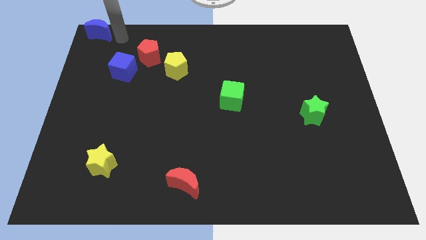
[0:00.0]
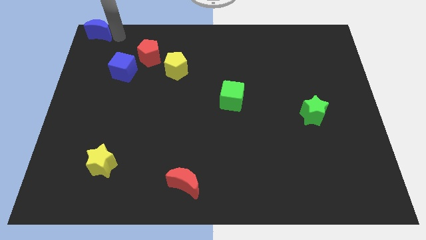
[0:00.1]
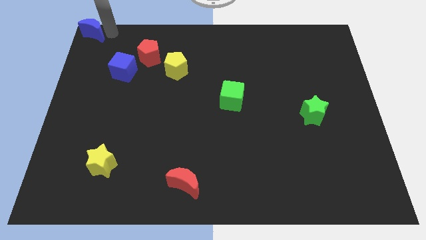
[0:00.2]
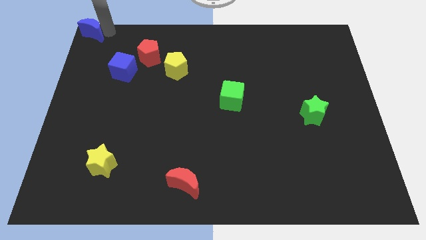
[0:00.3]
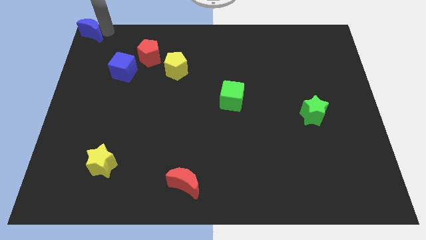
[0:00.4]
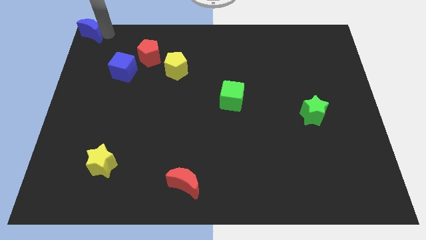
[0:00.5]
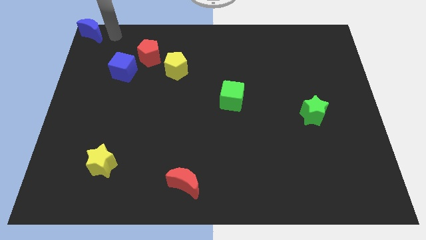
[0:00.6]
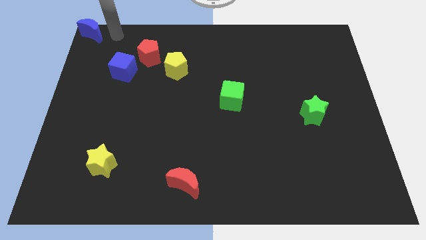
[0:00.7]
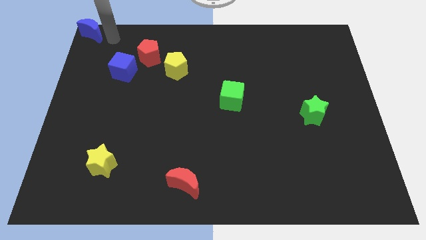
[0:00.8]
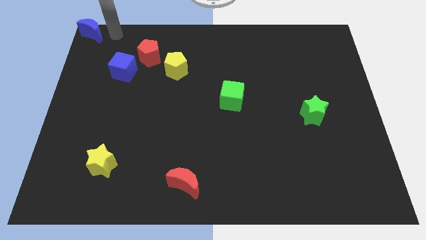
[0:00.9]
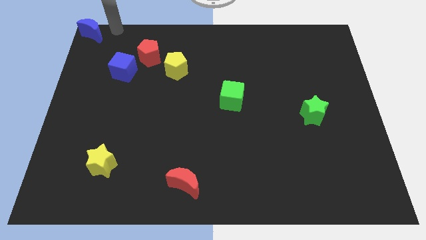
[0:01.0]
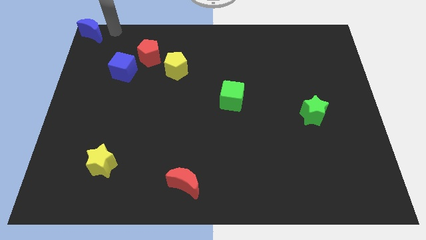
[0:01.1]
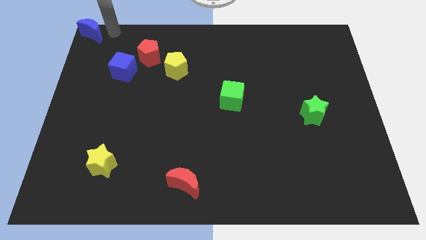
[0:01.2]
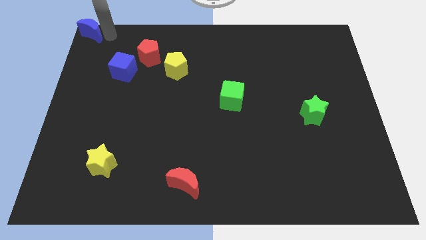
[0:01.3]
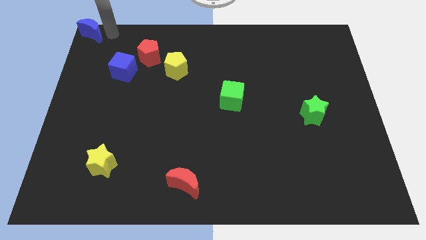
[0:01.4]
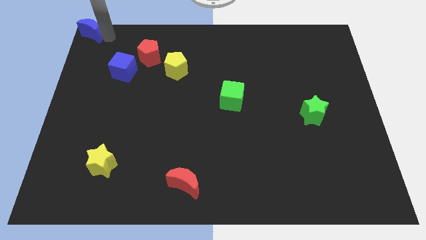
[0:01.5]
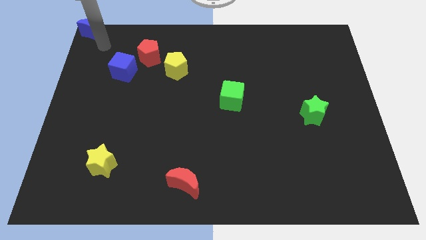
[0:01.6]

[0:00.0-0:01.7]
move the arm away from blue crescent

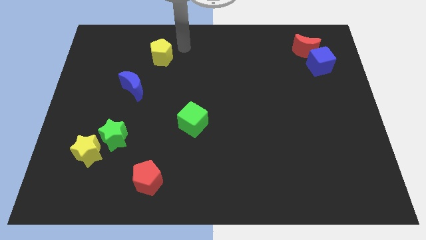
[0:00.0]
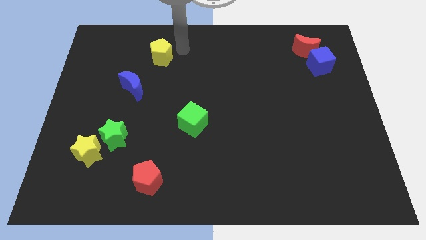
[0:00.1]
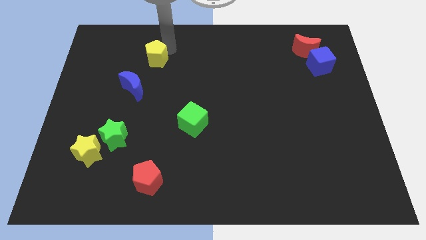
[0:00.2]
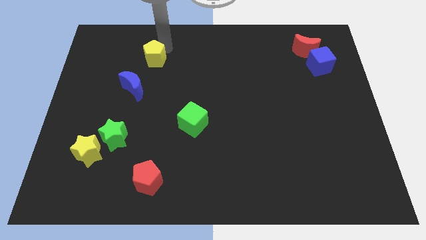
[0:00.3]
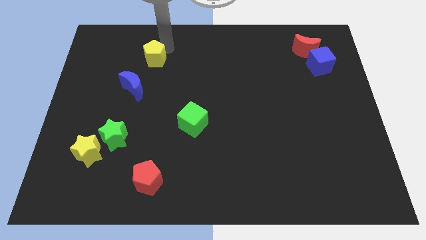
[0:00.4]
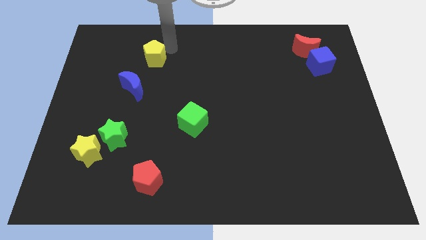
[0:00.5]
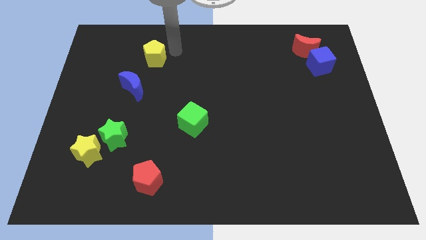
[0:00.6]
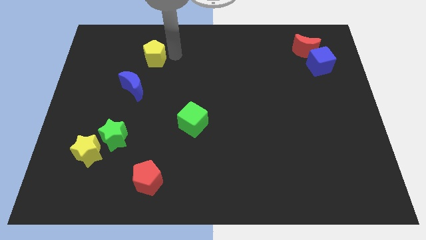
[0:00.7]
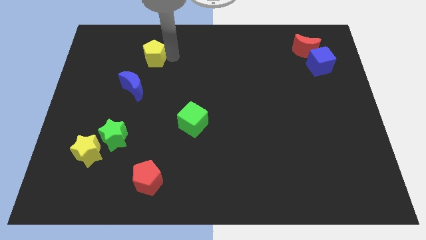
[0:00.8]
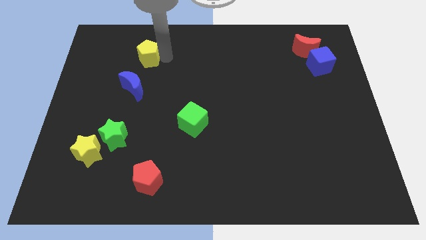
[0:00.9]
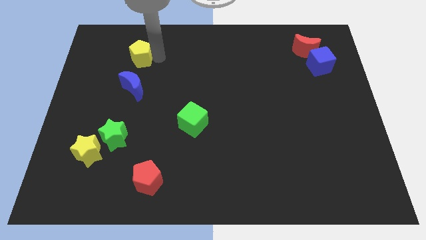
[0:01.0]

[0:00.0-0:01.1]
push yellow pentagon above blue crescent

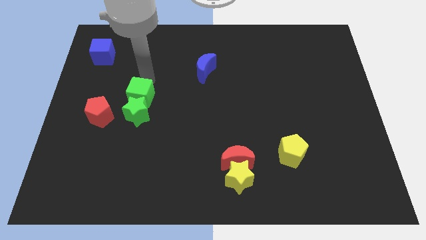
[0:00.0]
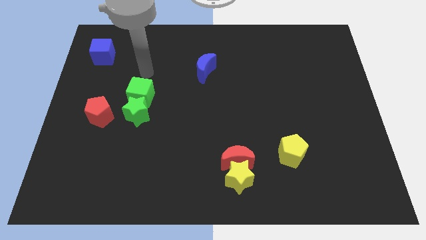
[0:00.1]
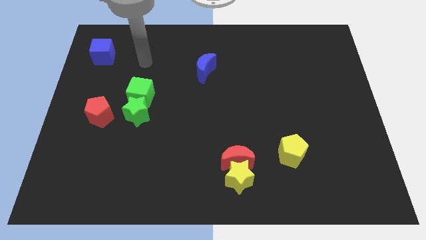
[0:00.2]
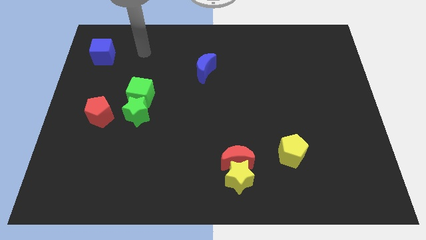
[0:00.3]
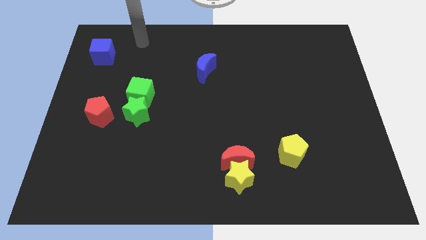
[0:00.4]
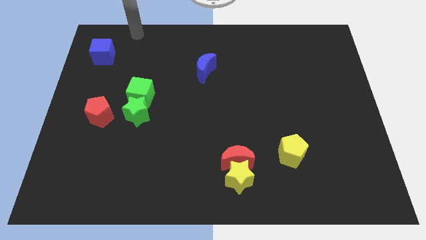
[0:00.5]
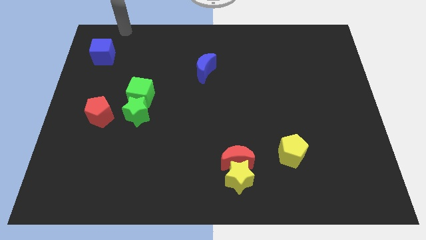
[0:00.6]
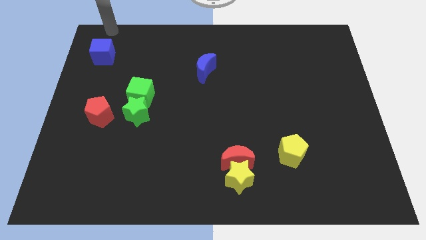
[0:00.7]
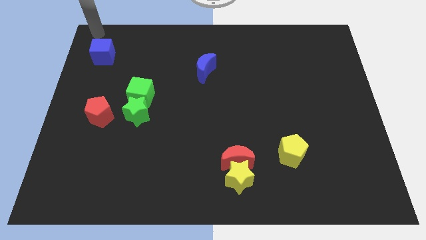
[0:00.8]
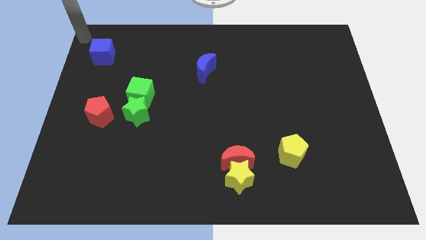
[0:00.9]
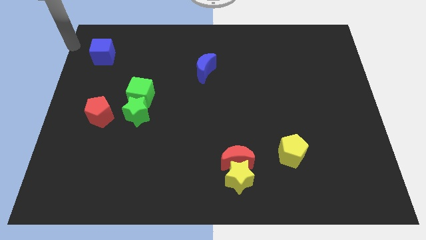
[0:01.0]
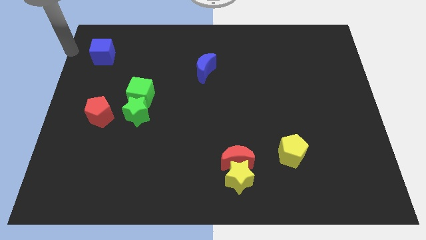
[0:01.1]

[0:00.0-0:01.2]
point your arm to the left side of blye cube

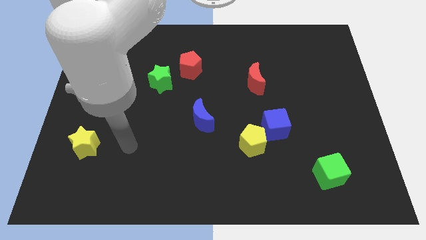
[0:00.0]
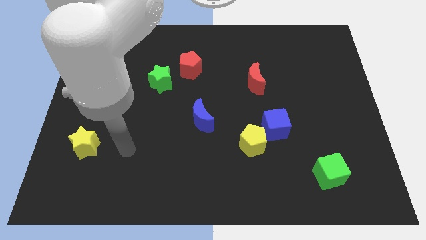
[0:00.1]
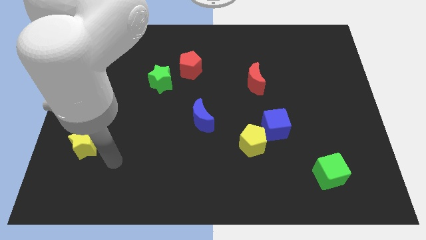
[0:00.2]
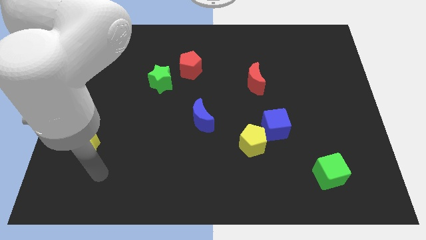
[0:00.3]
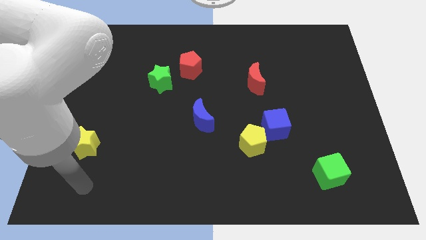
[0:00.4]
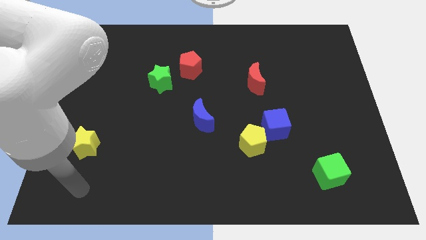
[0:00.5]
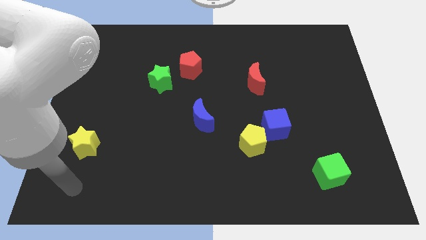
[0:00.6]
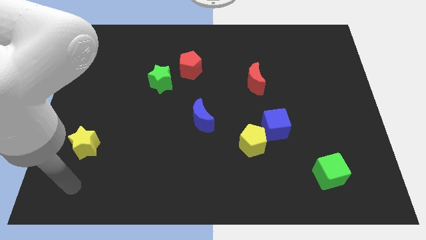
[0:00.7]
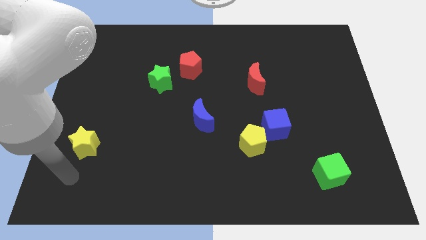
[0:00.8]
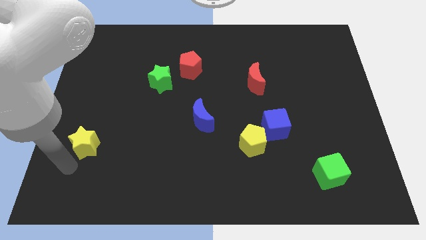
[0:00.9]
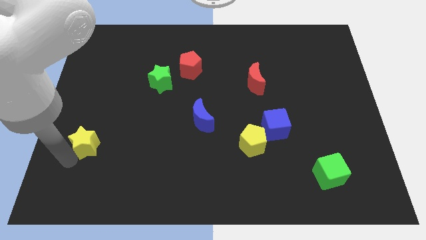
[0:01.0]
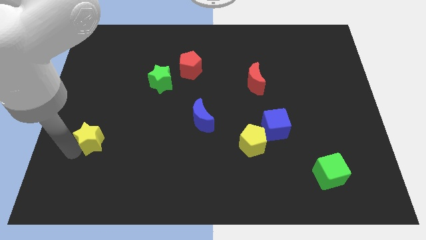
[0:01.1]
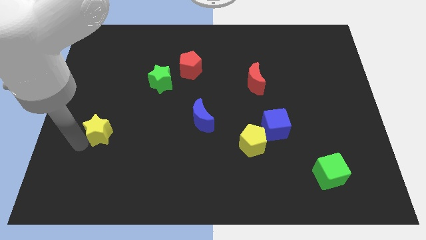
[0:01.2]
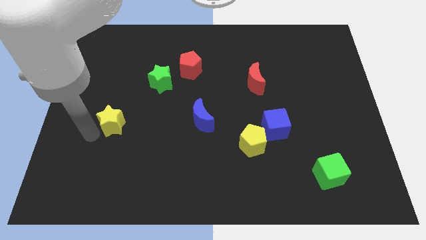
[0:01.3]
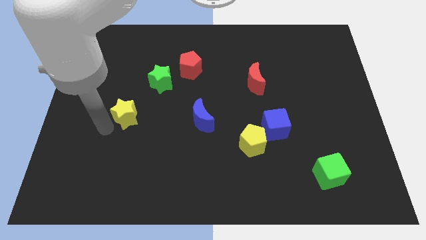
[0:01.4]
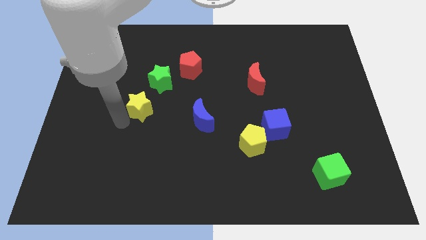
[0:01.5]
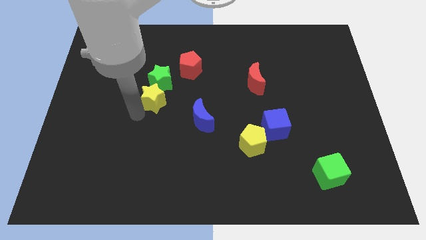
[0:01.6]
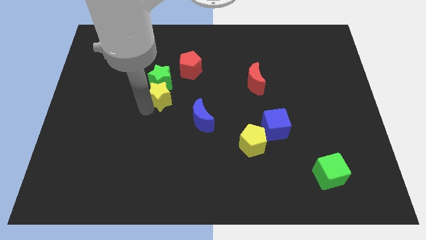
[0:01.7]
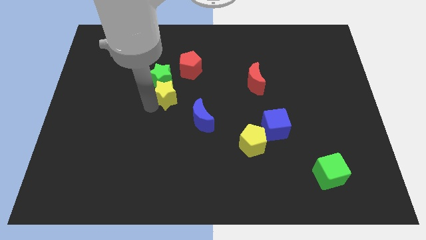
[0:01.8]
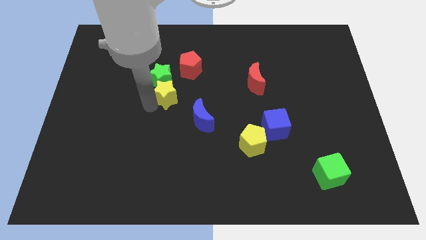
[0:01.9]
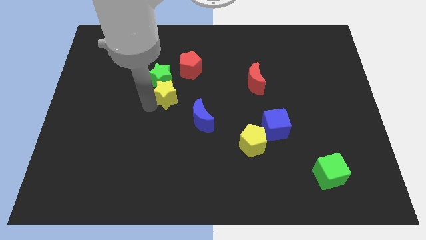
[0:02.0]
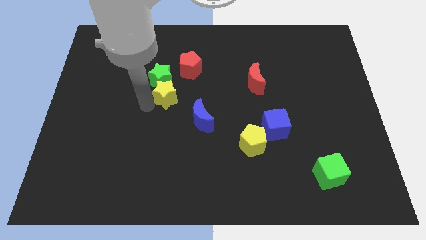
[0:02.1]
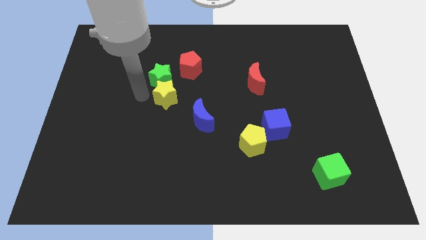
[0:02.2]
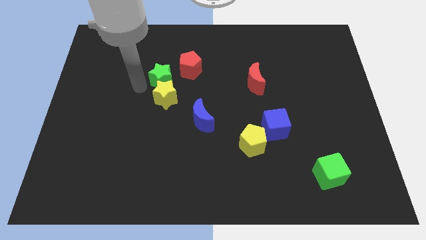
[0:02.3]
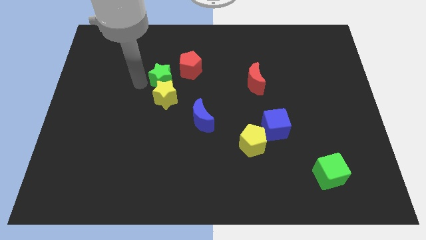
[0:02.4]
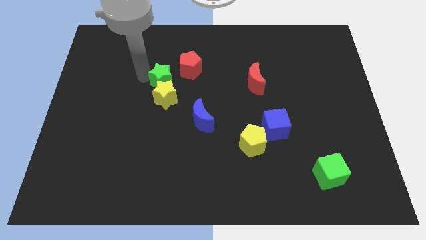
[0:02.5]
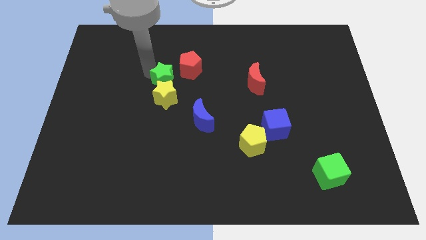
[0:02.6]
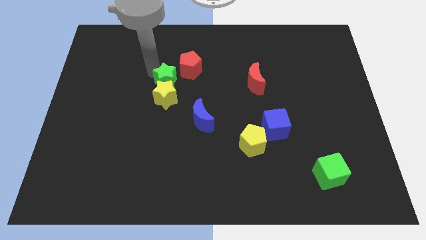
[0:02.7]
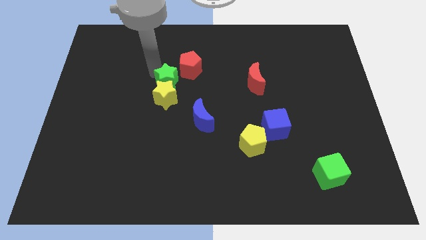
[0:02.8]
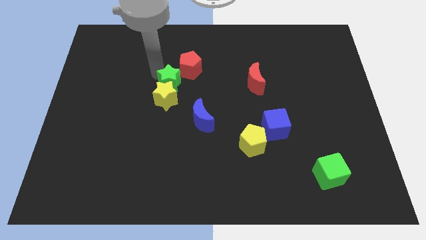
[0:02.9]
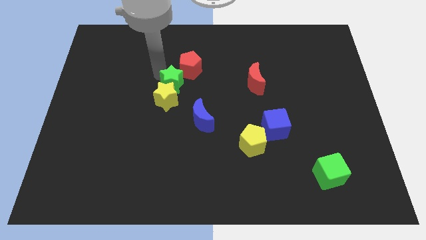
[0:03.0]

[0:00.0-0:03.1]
move the yellow star into the bottom side of the green star

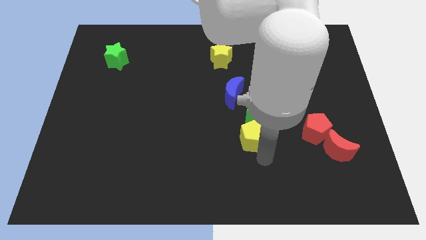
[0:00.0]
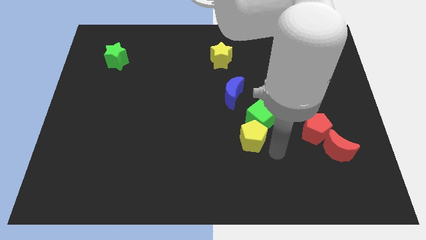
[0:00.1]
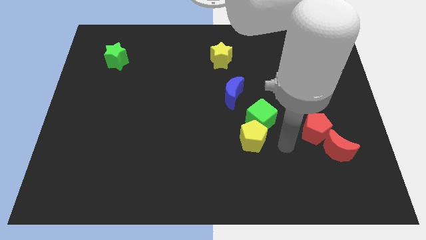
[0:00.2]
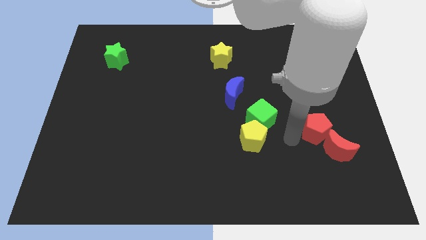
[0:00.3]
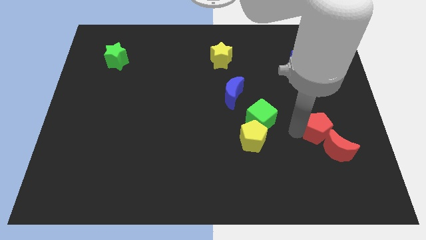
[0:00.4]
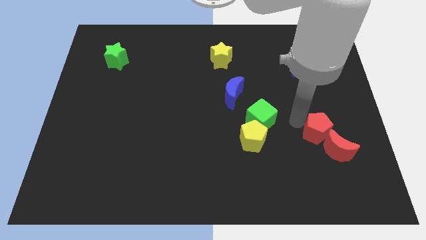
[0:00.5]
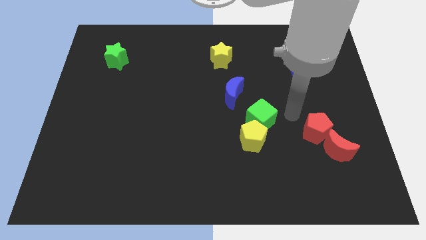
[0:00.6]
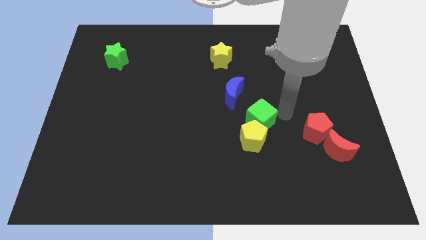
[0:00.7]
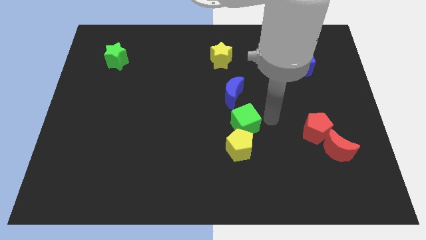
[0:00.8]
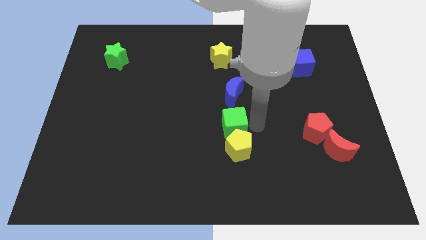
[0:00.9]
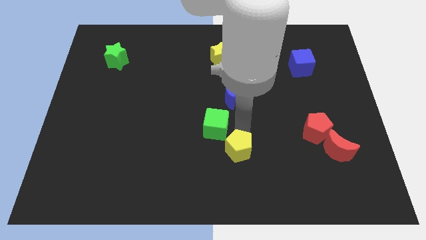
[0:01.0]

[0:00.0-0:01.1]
push the green cube slightly to the left

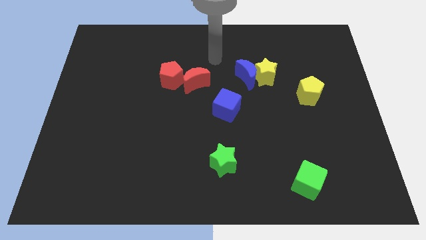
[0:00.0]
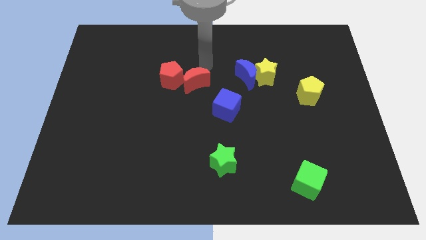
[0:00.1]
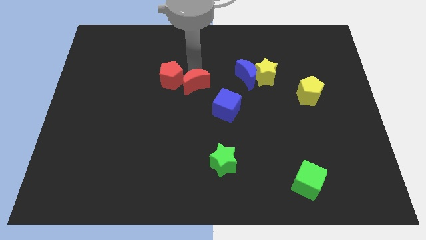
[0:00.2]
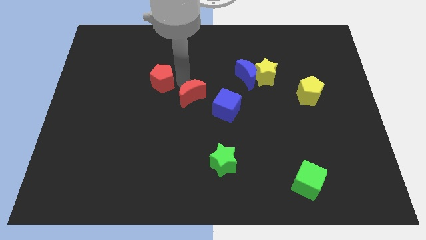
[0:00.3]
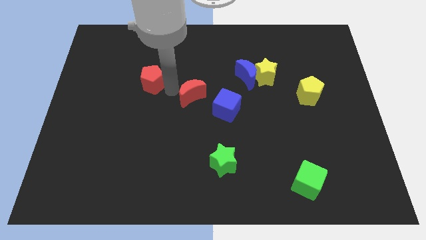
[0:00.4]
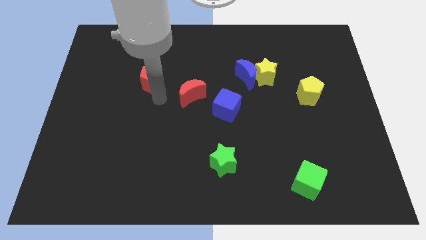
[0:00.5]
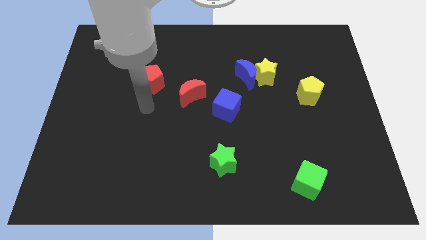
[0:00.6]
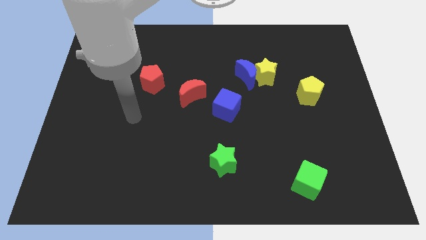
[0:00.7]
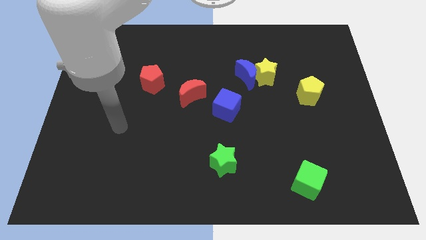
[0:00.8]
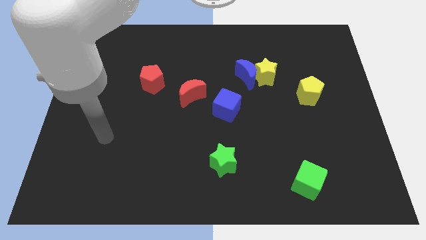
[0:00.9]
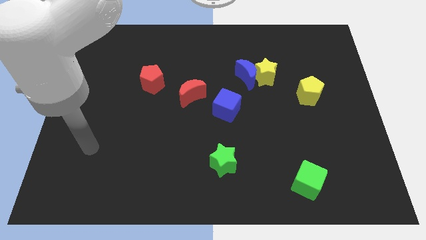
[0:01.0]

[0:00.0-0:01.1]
separate the red pentagon and the red moon
